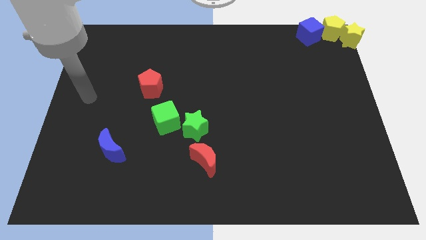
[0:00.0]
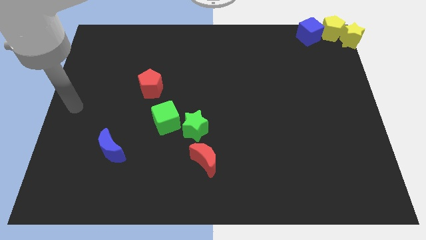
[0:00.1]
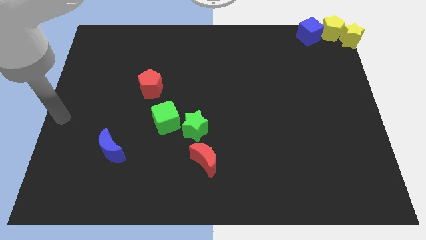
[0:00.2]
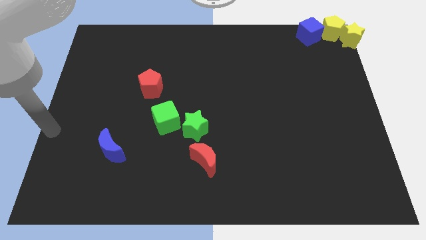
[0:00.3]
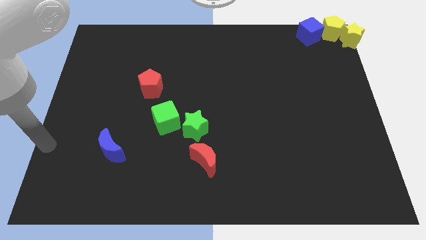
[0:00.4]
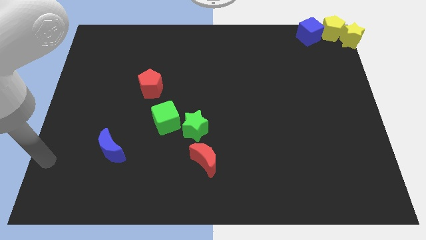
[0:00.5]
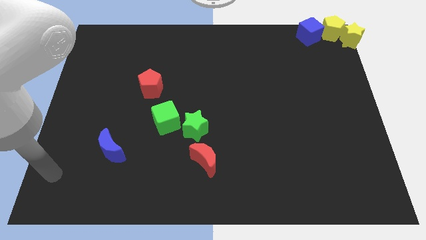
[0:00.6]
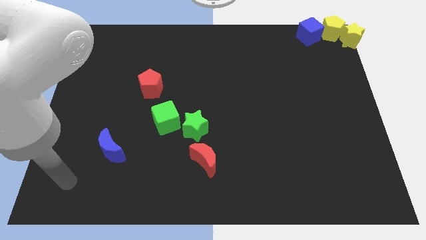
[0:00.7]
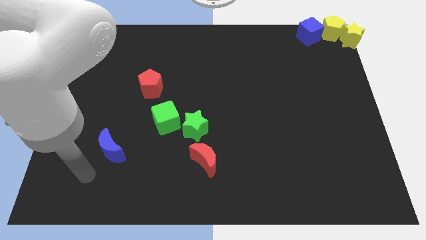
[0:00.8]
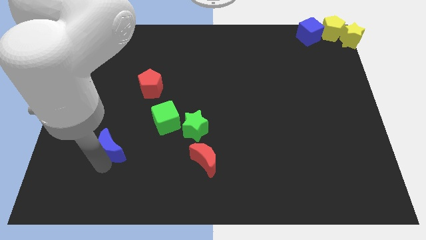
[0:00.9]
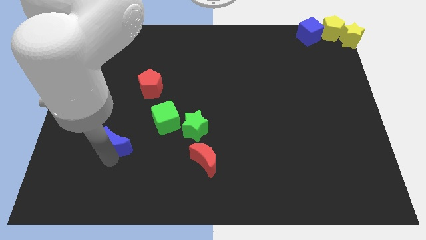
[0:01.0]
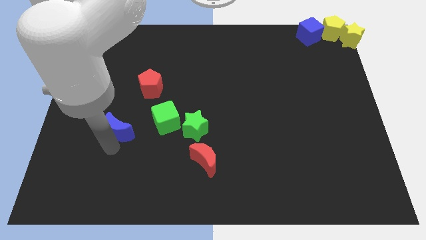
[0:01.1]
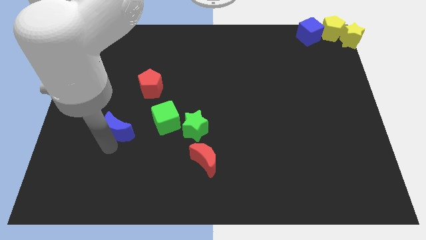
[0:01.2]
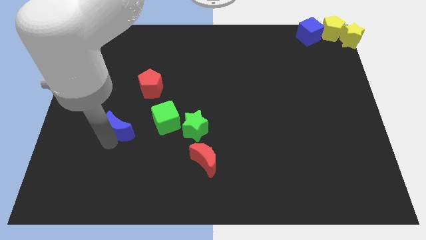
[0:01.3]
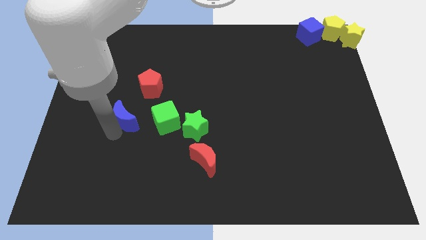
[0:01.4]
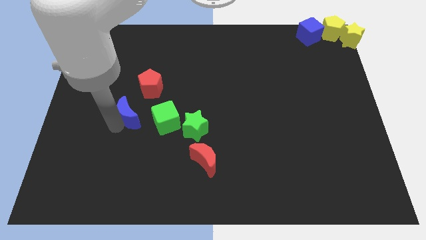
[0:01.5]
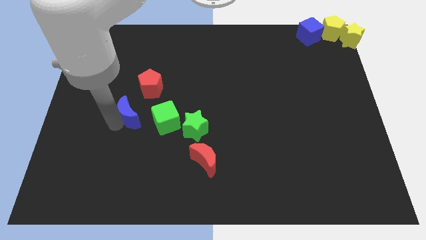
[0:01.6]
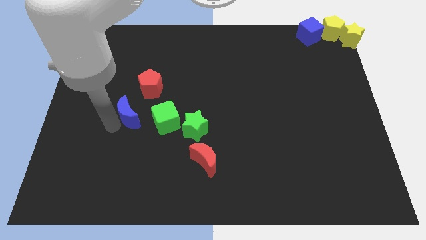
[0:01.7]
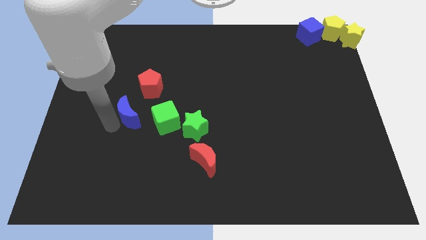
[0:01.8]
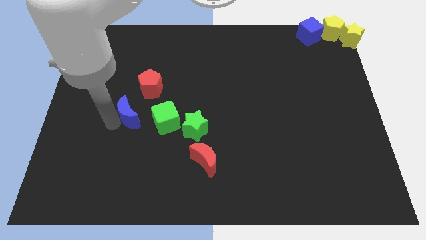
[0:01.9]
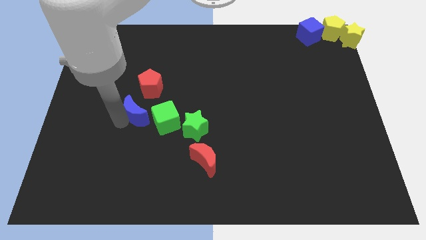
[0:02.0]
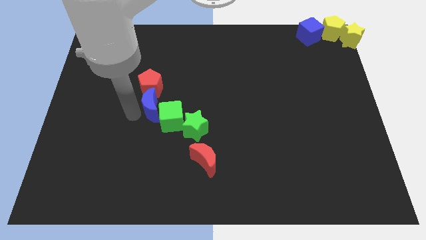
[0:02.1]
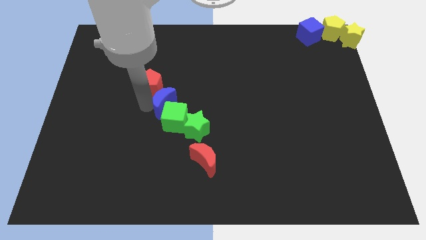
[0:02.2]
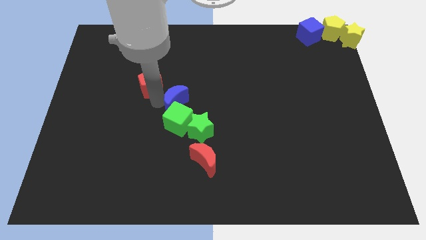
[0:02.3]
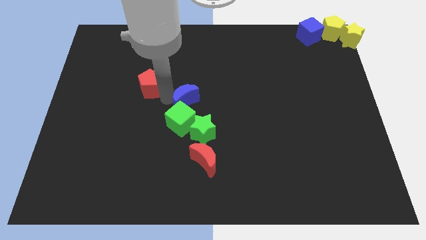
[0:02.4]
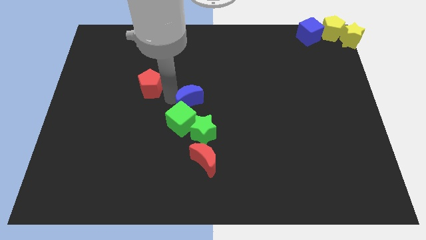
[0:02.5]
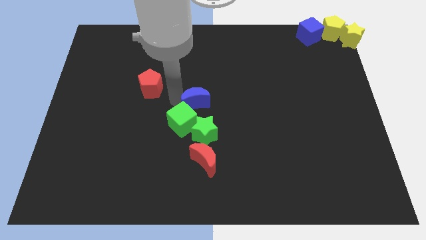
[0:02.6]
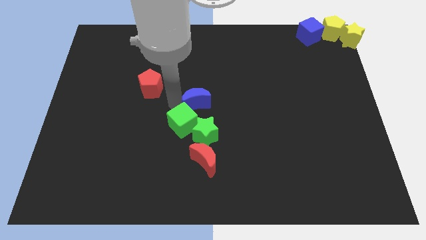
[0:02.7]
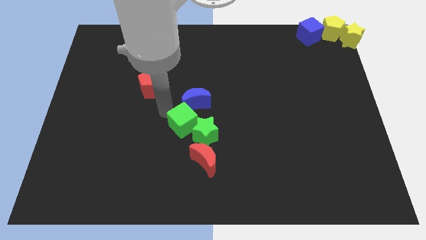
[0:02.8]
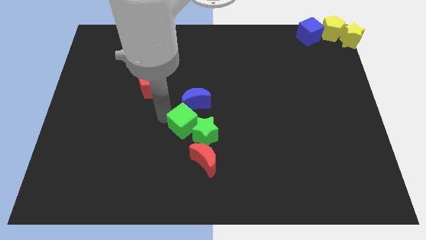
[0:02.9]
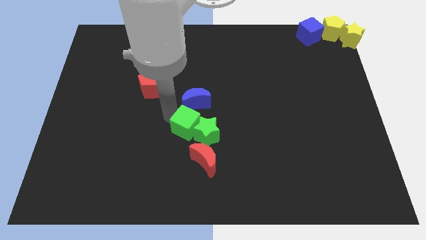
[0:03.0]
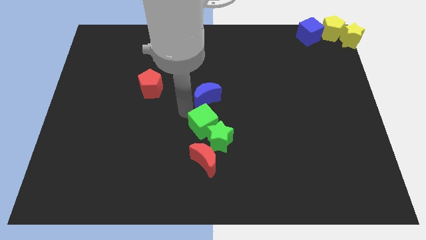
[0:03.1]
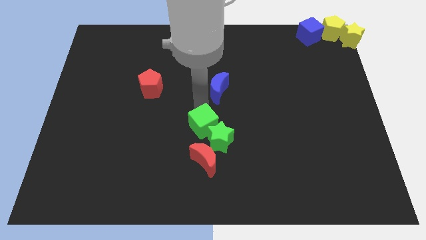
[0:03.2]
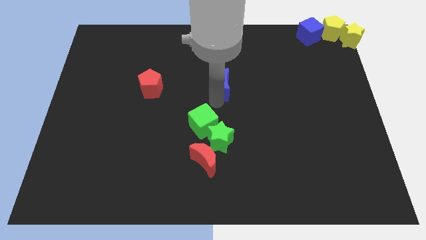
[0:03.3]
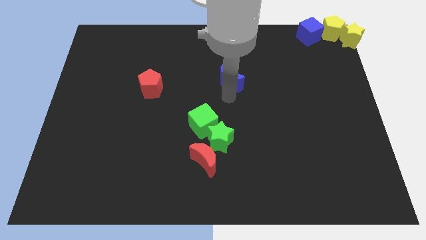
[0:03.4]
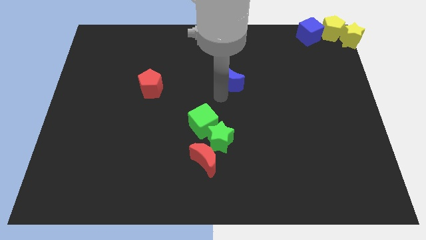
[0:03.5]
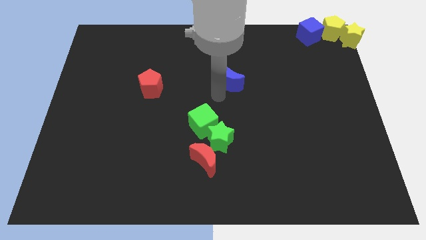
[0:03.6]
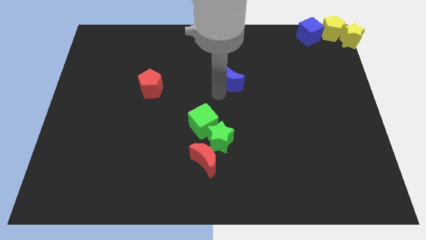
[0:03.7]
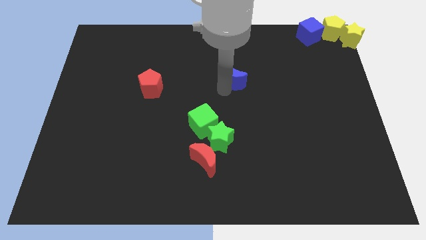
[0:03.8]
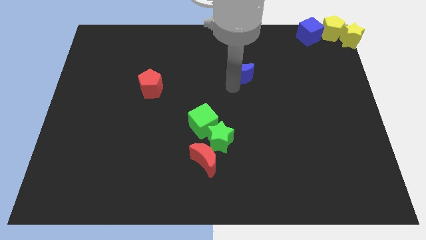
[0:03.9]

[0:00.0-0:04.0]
push the blue crescent towards the horizontal line

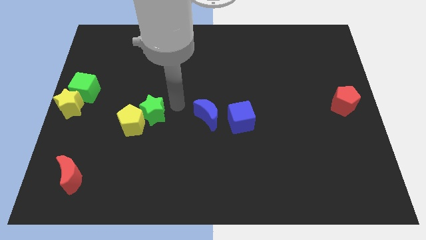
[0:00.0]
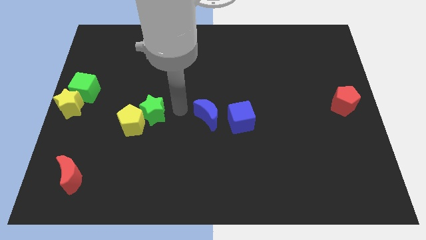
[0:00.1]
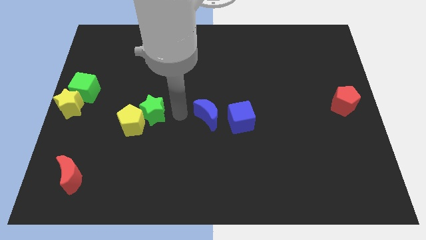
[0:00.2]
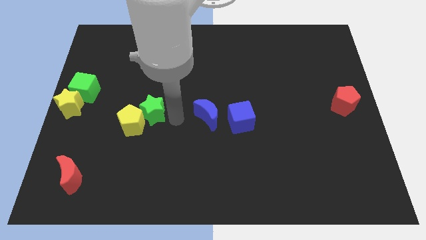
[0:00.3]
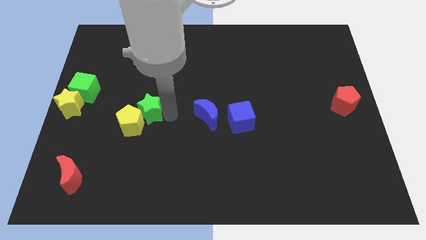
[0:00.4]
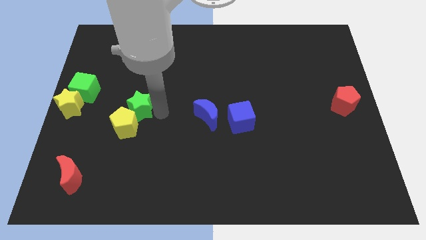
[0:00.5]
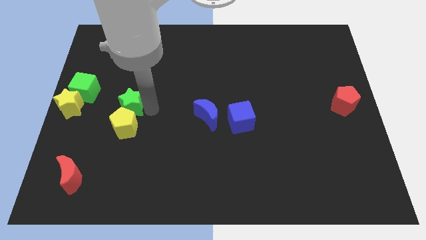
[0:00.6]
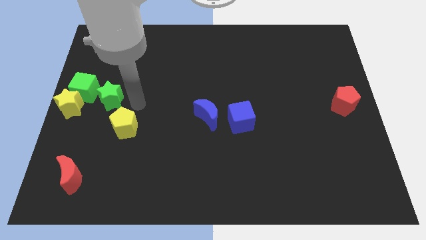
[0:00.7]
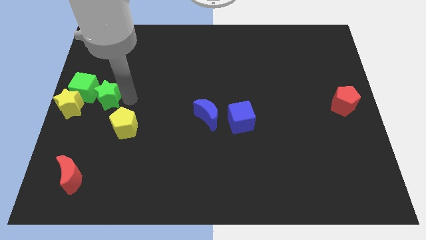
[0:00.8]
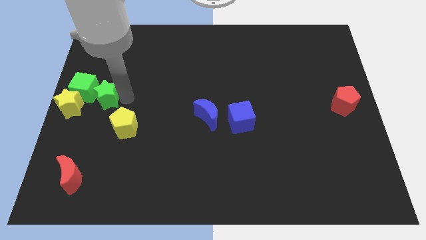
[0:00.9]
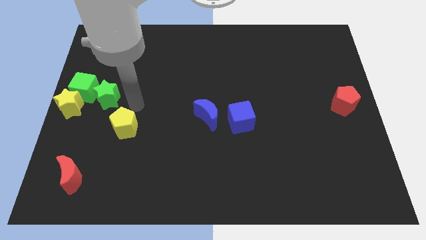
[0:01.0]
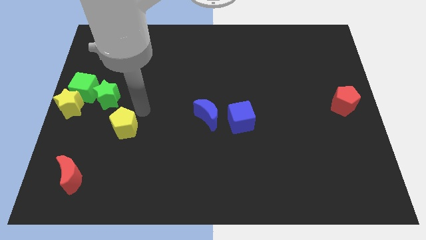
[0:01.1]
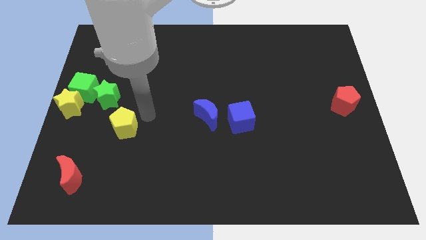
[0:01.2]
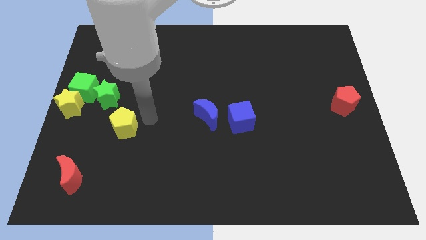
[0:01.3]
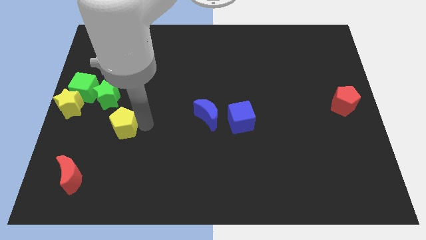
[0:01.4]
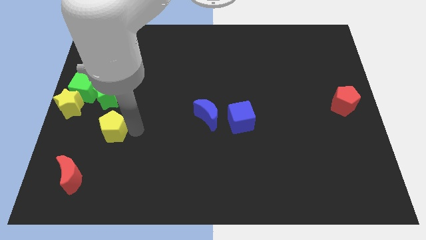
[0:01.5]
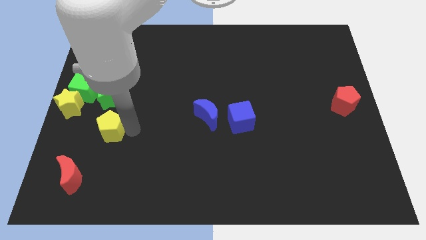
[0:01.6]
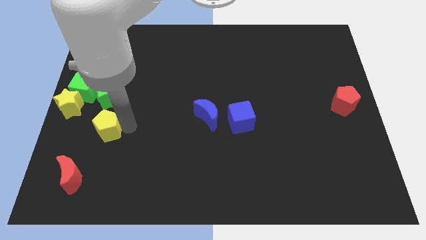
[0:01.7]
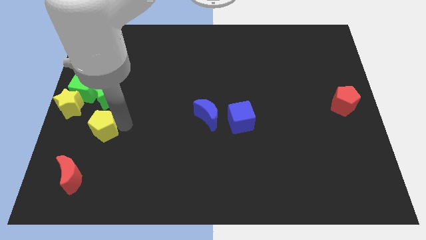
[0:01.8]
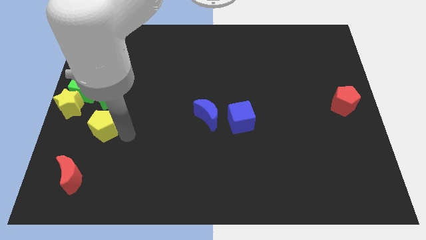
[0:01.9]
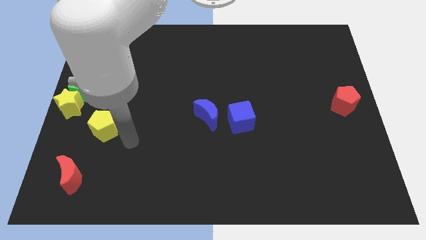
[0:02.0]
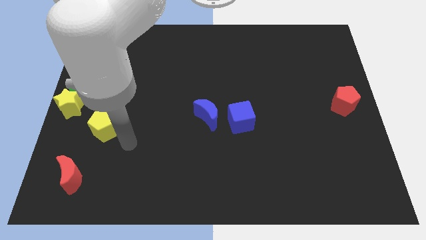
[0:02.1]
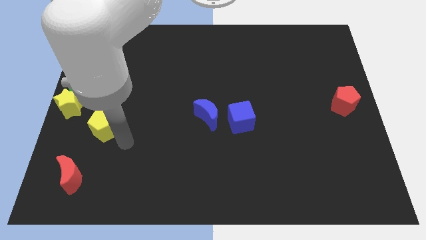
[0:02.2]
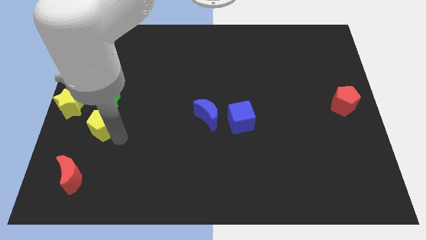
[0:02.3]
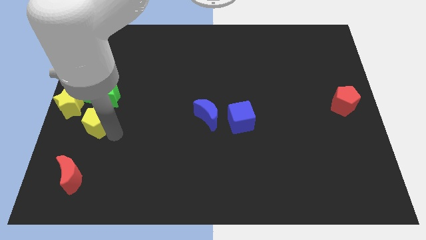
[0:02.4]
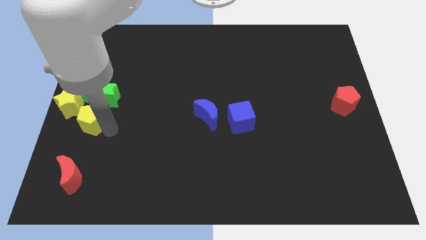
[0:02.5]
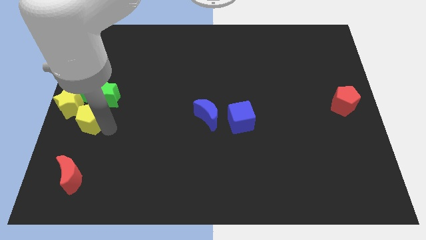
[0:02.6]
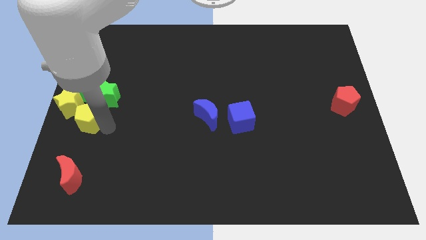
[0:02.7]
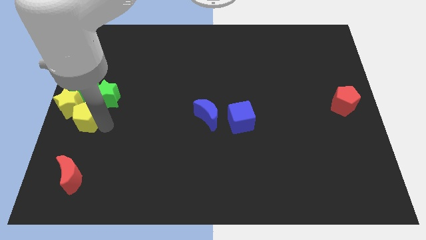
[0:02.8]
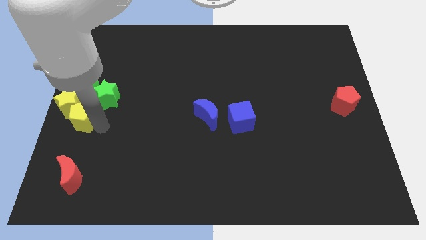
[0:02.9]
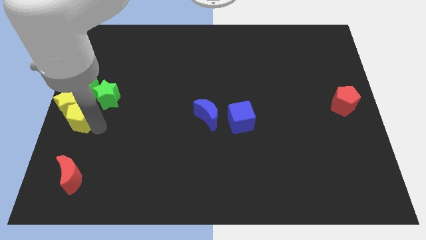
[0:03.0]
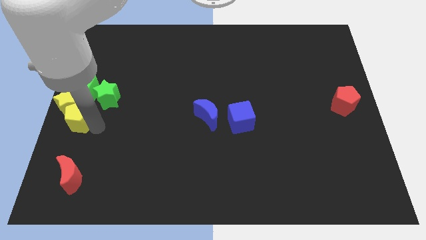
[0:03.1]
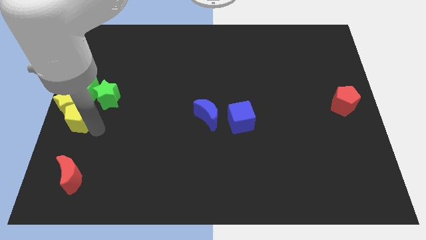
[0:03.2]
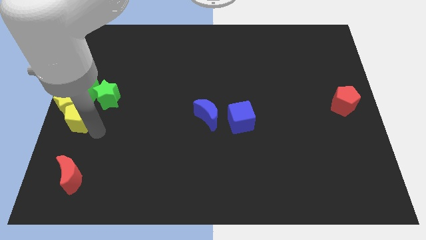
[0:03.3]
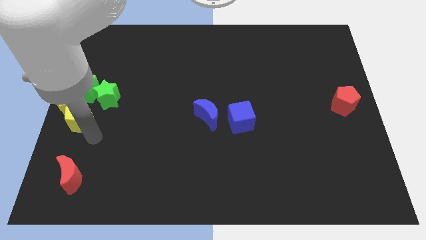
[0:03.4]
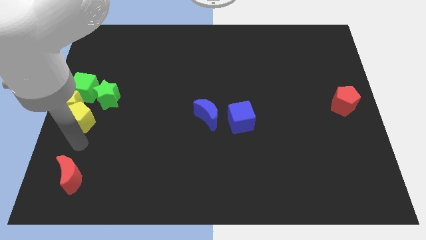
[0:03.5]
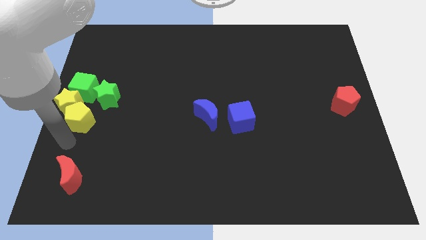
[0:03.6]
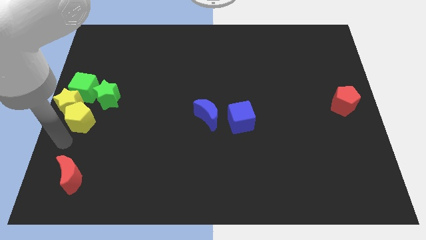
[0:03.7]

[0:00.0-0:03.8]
push the green star and yellow pentagon towards the green cube and yellow star

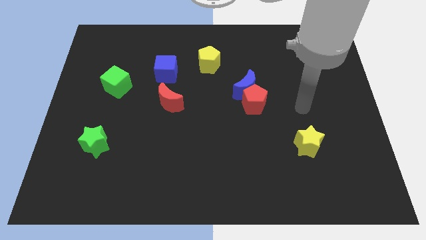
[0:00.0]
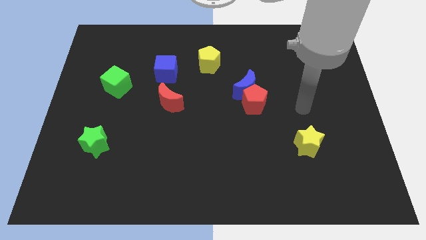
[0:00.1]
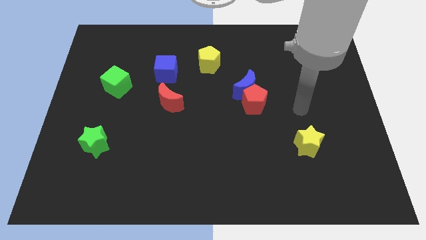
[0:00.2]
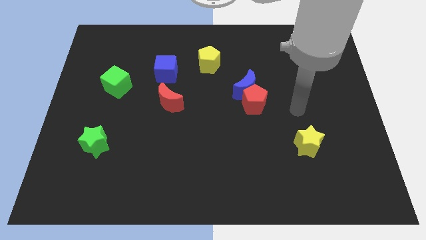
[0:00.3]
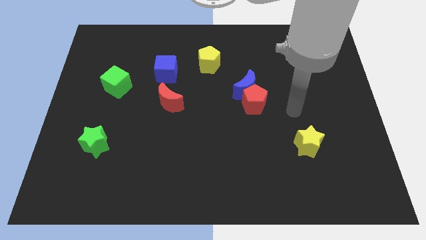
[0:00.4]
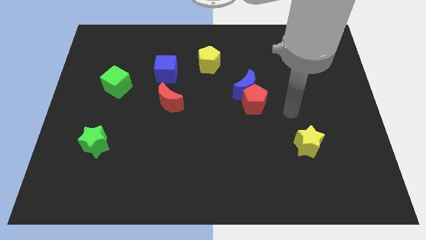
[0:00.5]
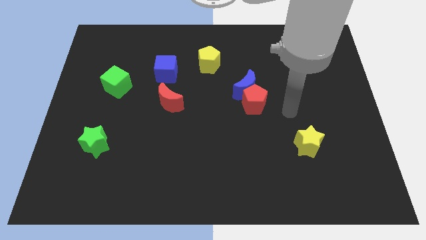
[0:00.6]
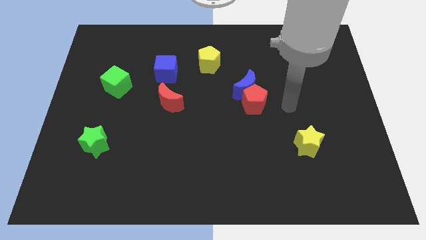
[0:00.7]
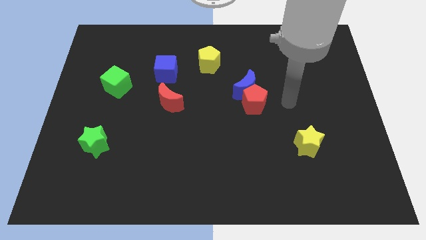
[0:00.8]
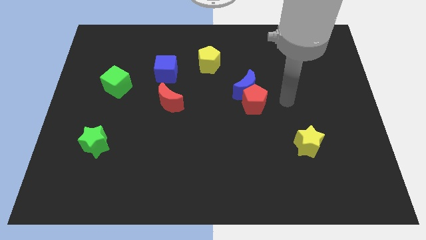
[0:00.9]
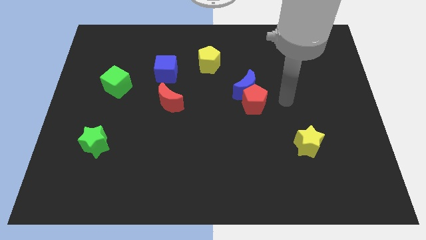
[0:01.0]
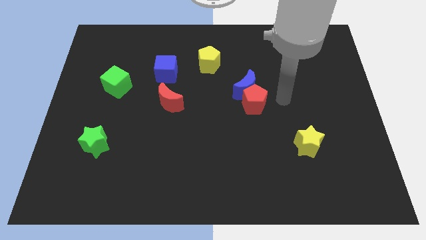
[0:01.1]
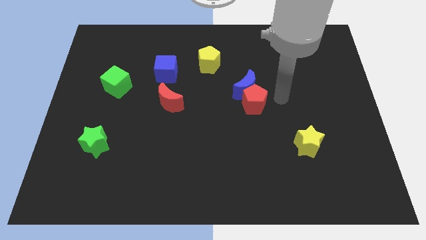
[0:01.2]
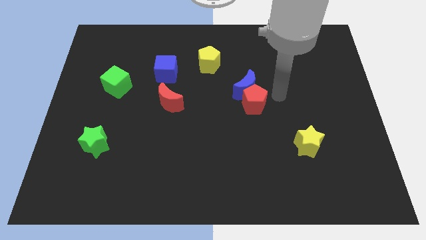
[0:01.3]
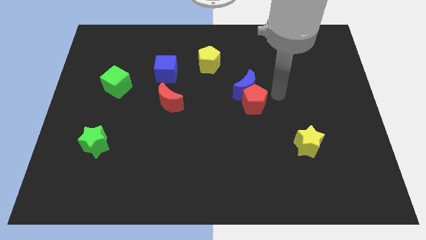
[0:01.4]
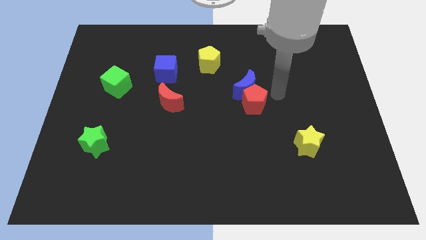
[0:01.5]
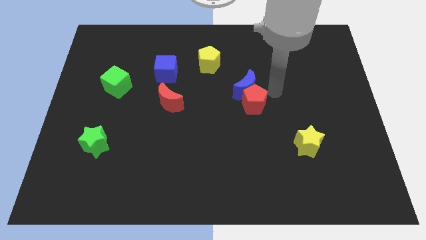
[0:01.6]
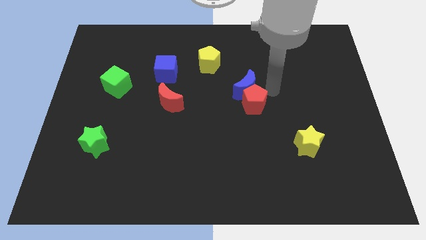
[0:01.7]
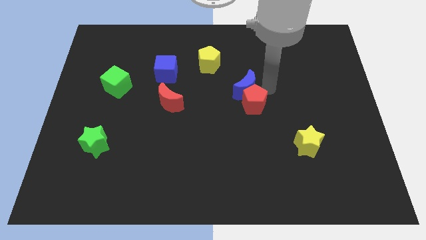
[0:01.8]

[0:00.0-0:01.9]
move your arm towards the red pentagon
